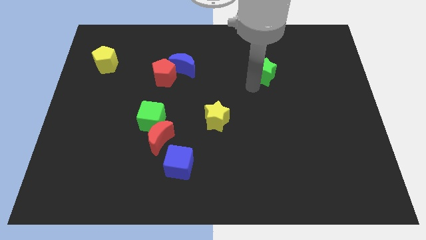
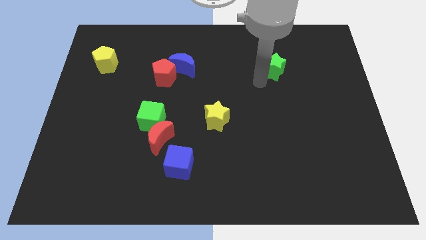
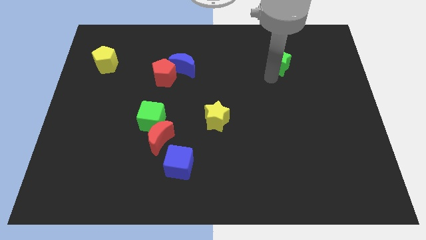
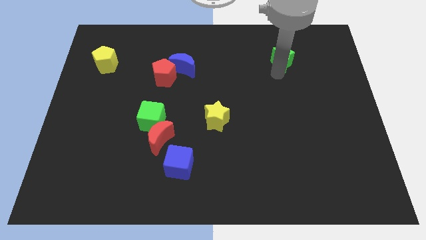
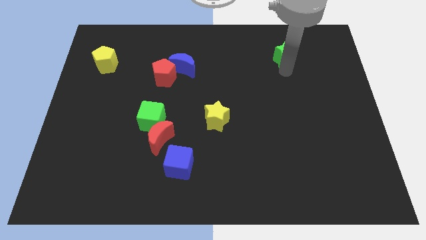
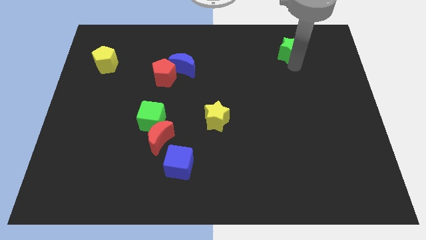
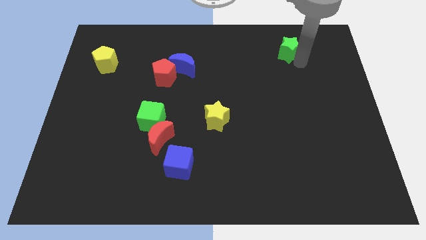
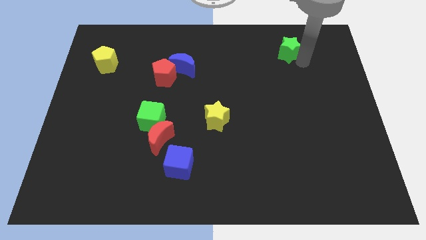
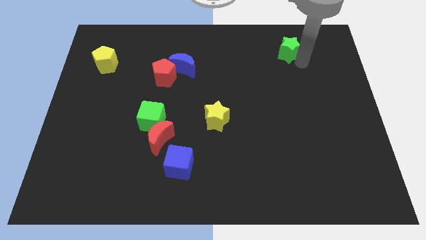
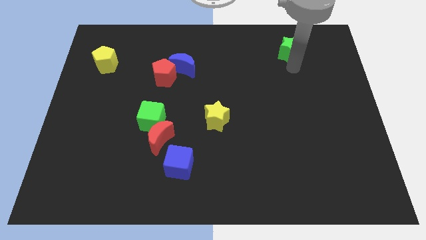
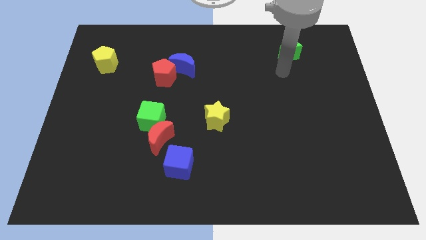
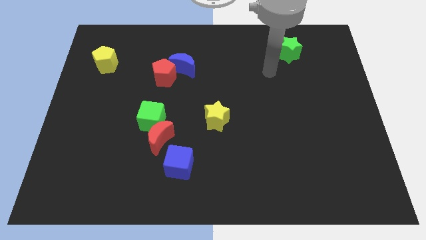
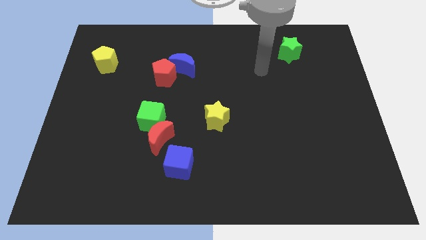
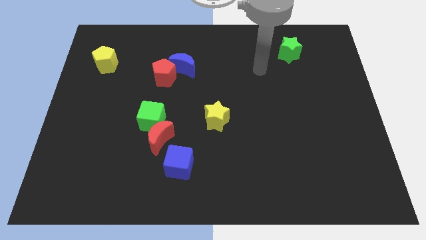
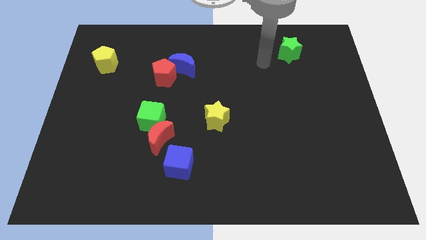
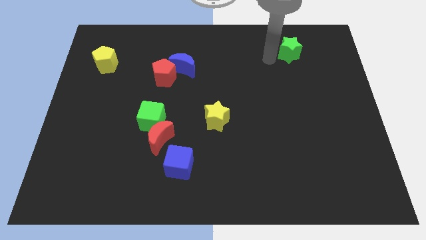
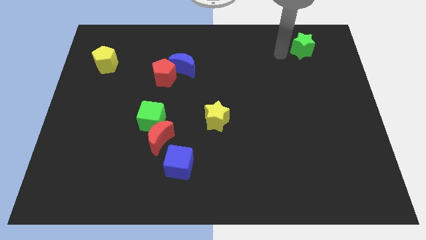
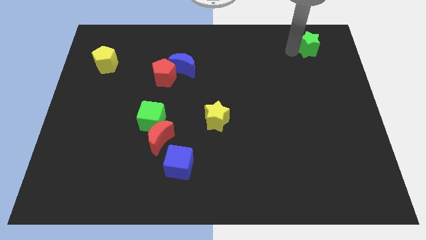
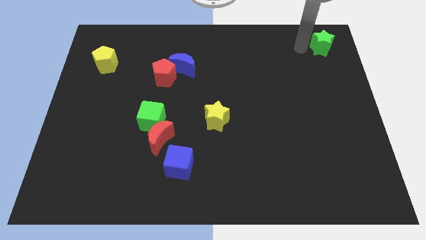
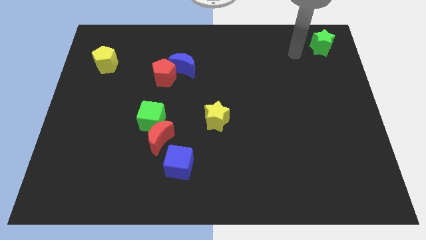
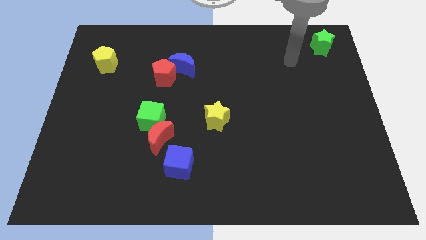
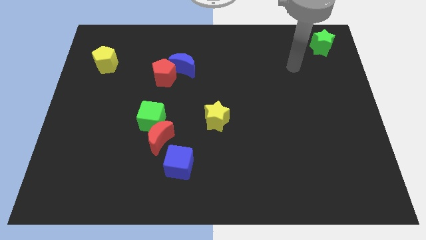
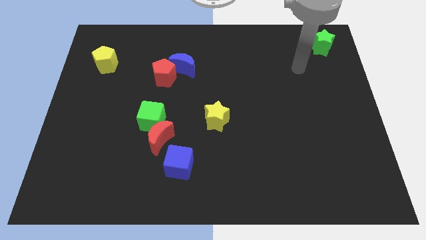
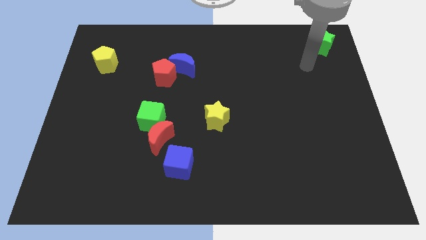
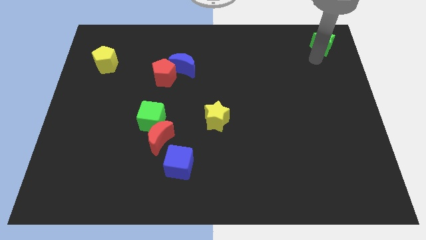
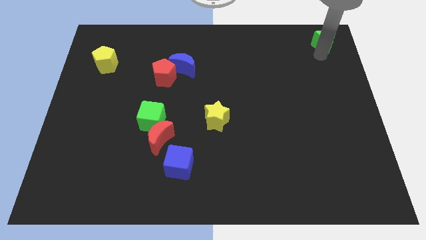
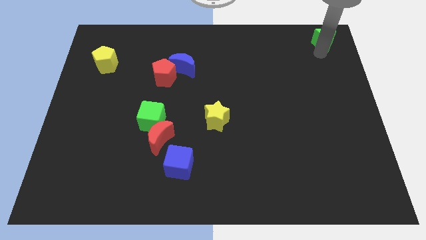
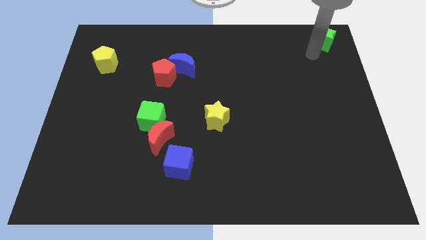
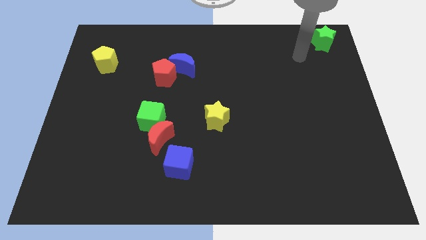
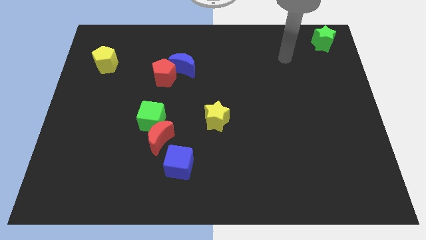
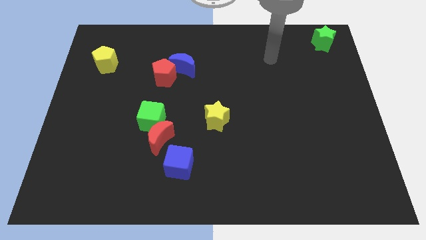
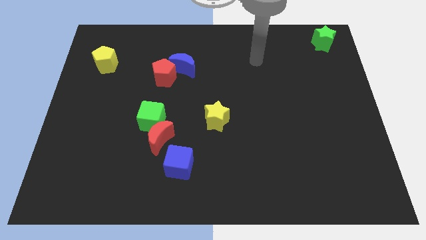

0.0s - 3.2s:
move the green star to the top right of the board

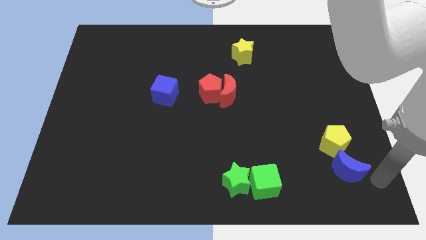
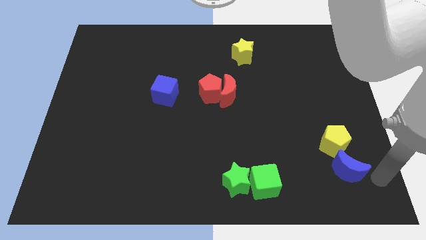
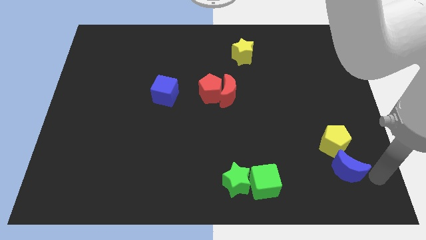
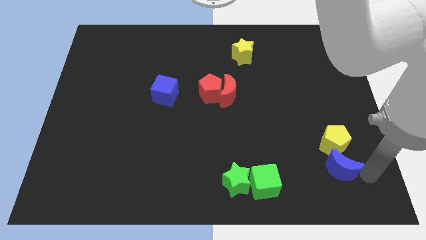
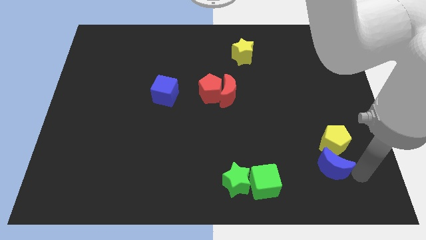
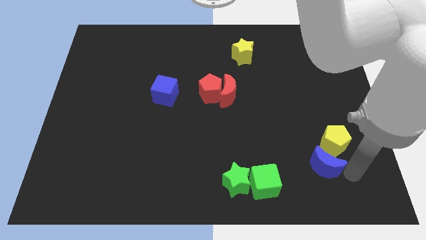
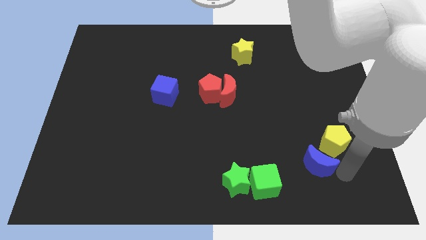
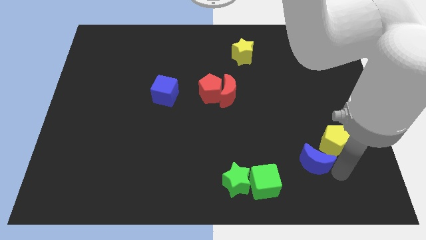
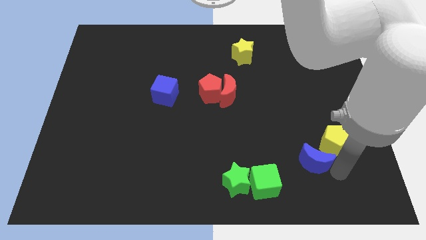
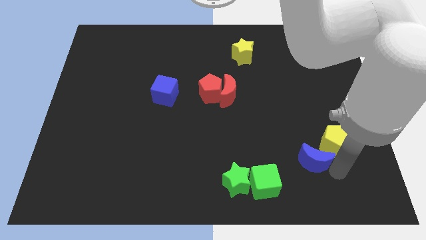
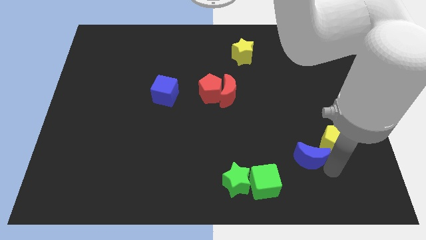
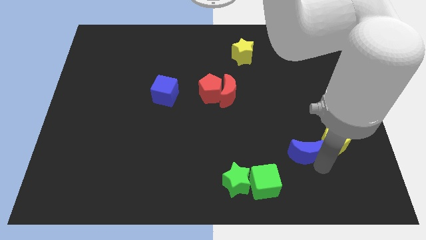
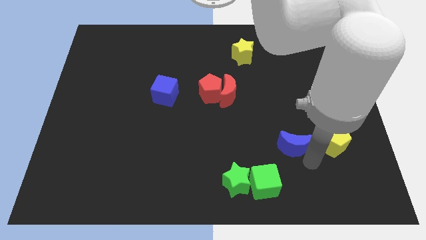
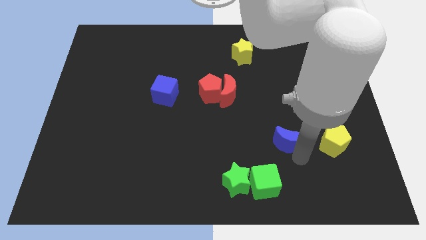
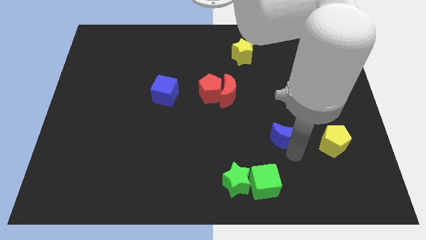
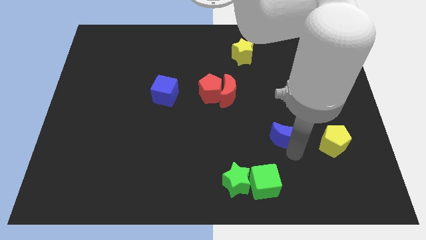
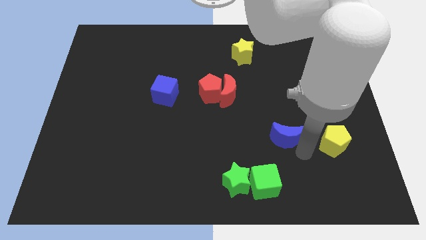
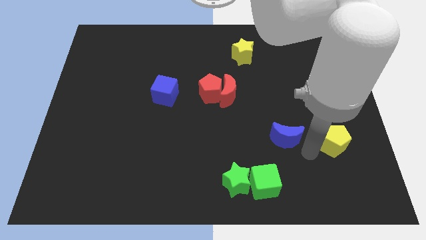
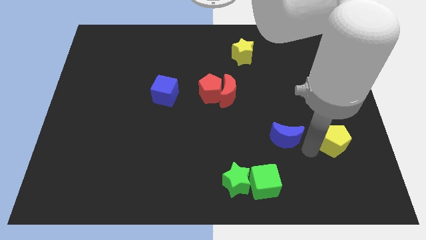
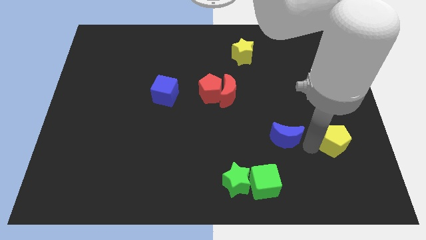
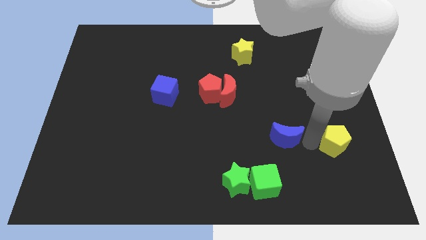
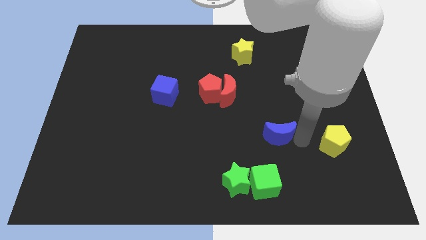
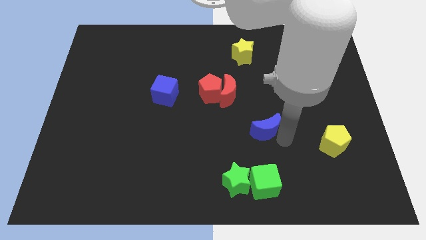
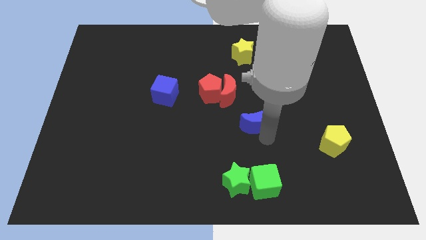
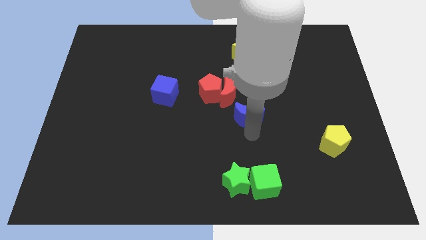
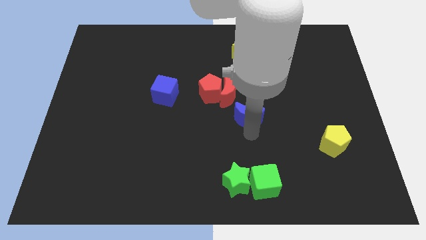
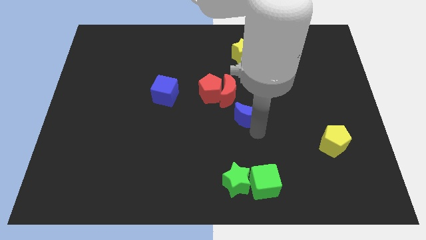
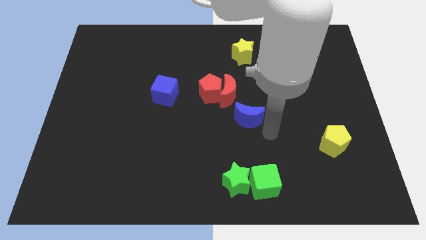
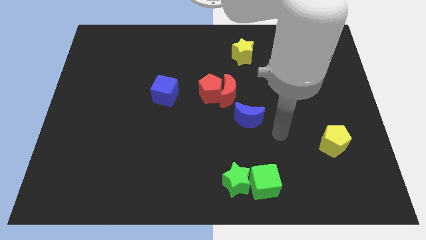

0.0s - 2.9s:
push the blue crescent to the center of the board

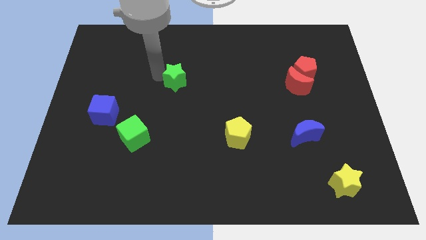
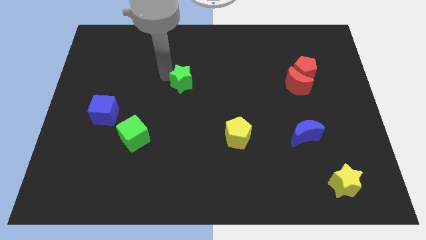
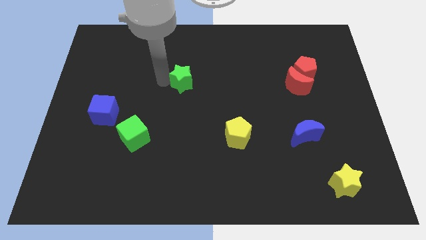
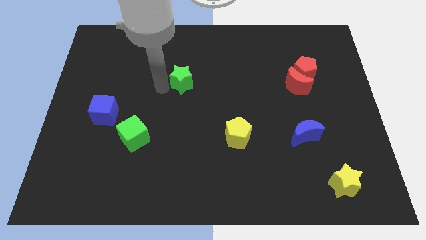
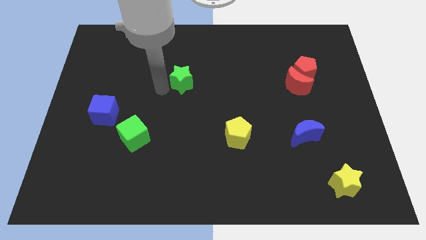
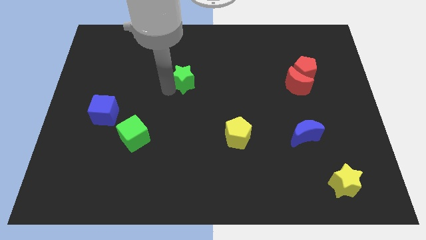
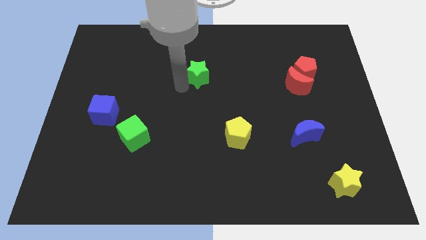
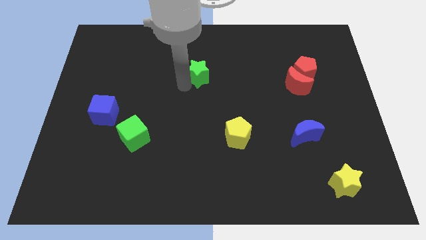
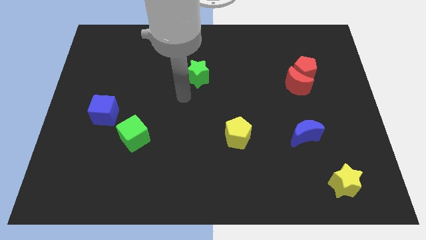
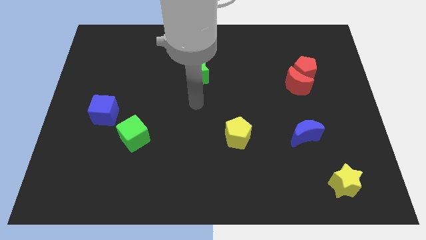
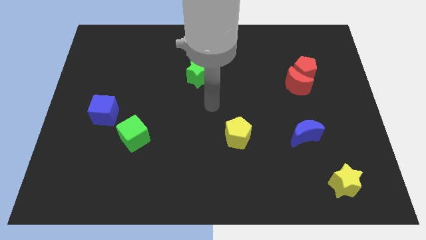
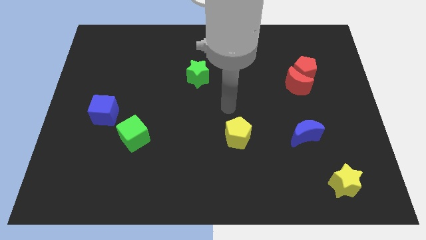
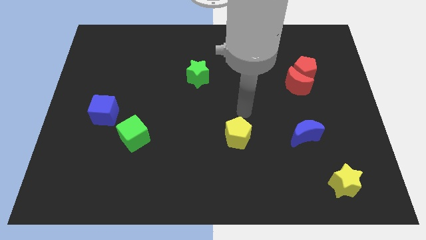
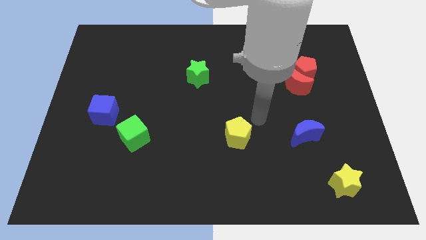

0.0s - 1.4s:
move green star towards its right

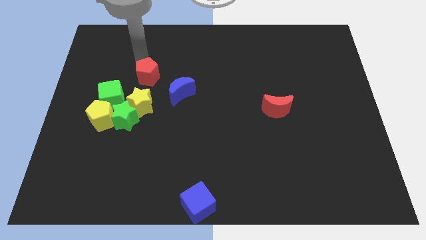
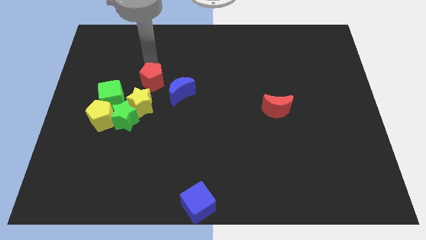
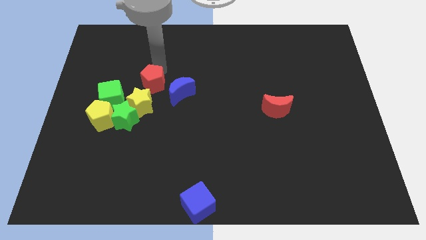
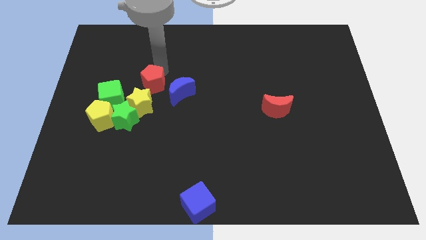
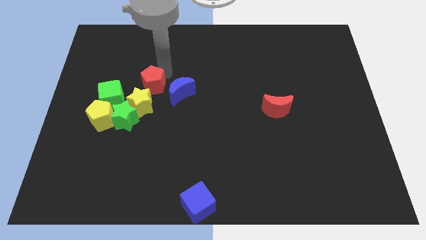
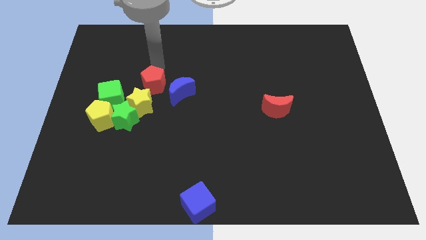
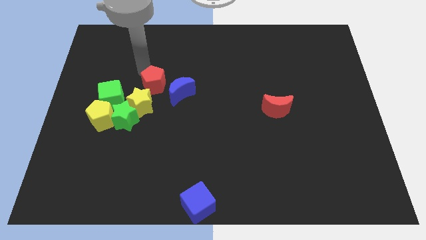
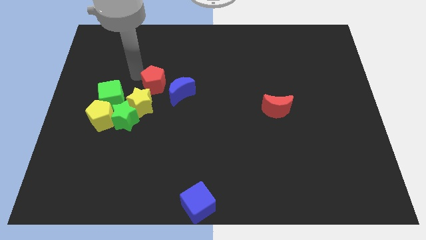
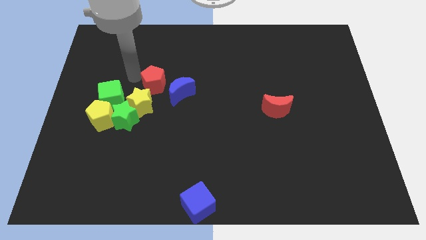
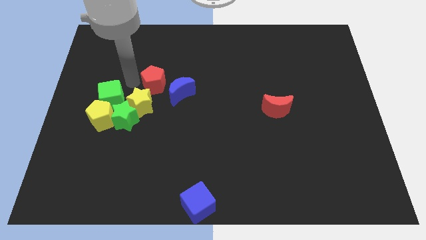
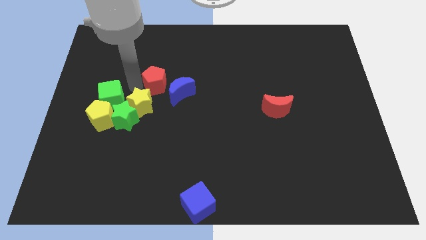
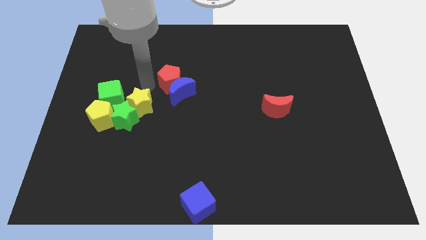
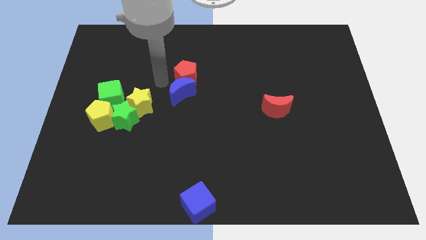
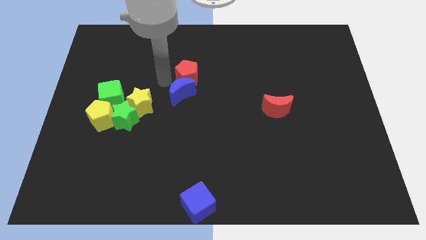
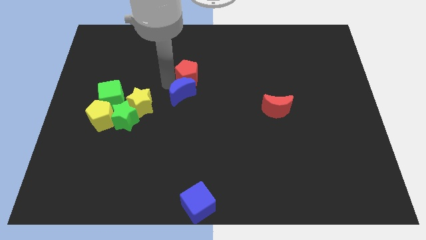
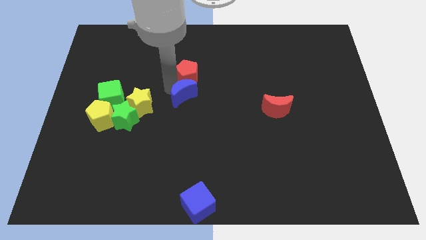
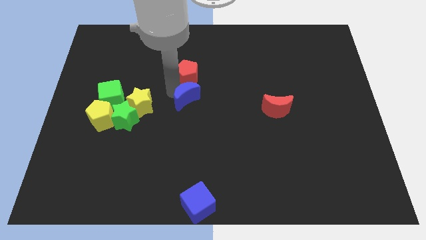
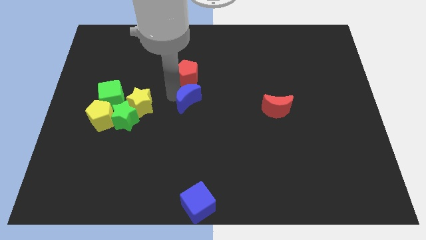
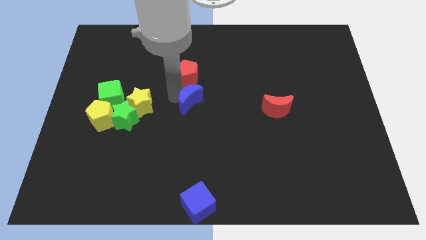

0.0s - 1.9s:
push the red pentagon towards the blue crescent
